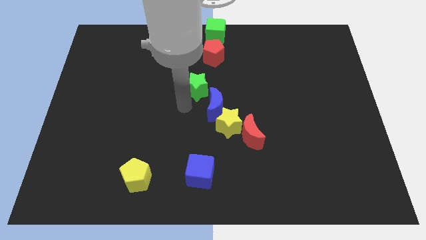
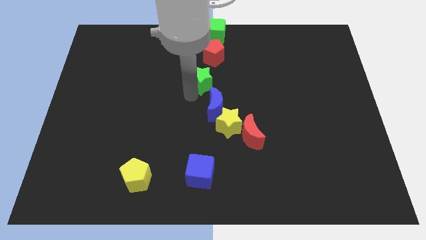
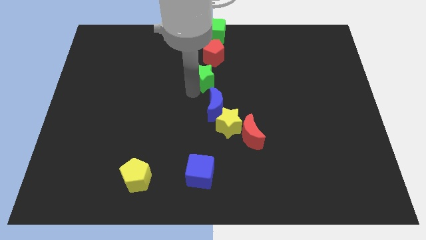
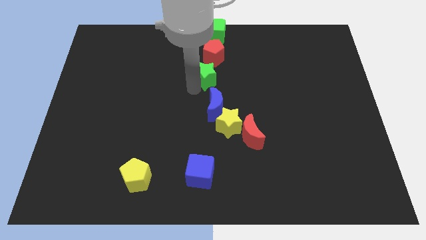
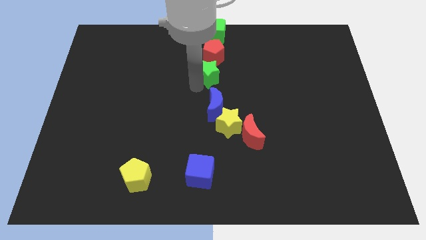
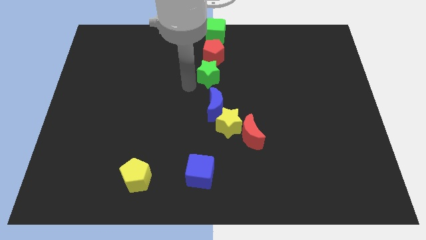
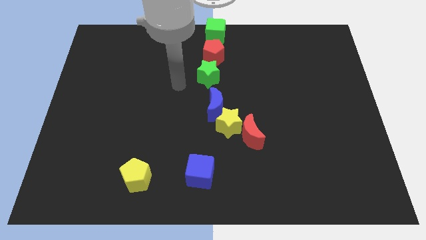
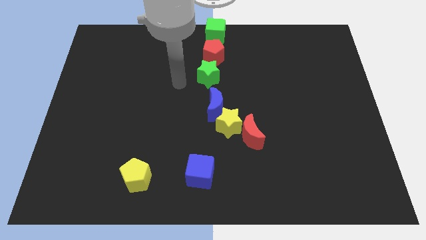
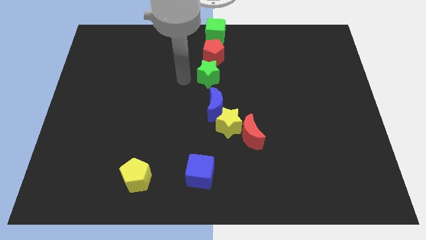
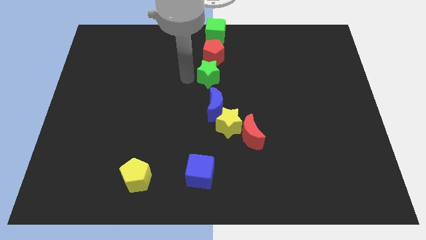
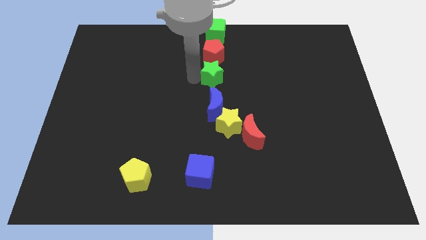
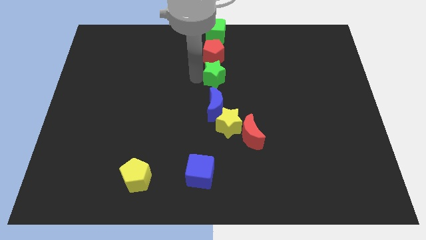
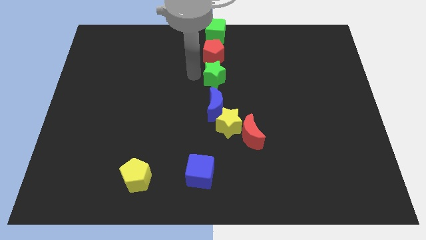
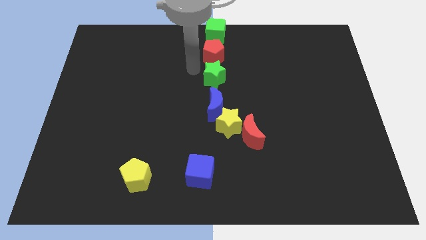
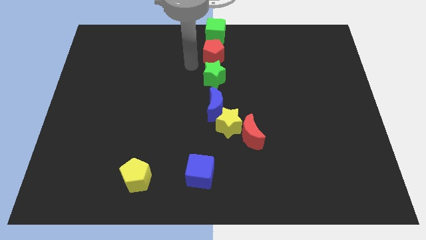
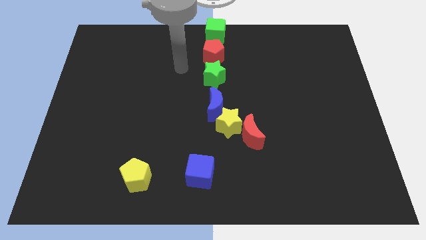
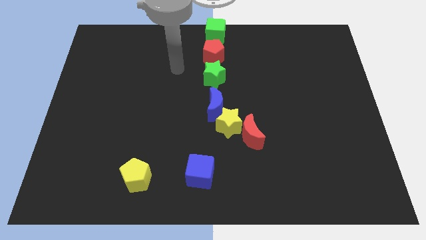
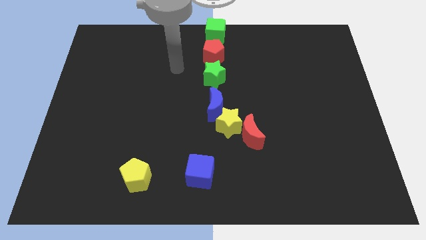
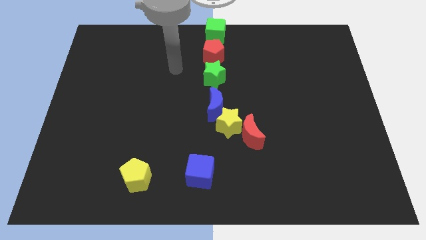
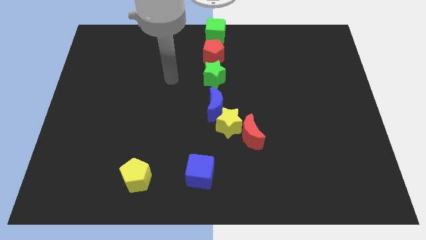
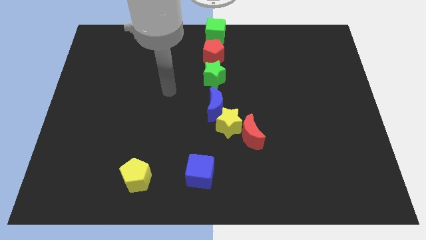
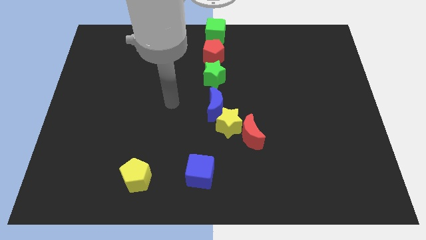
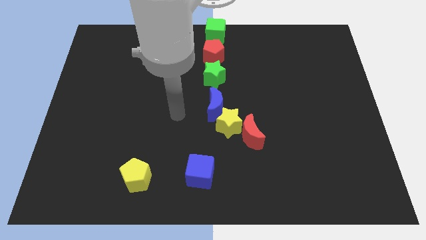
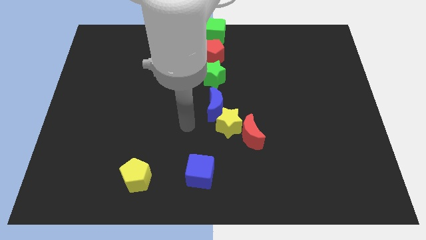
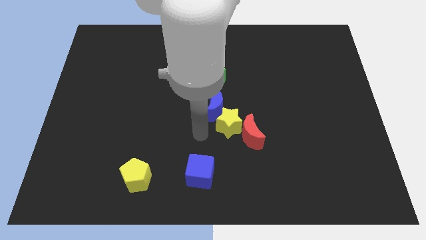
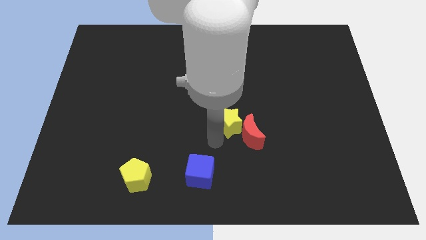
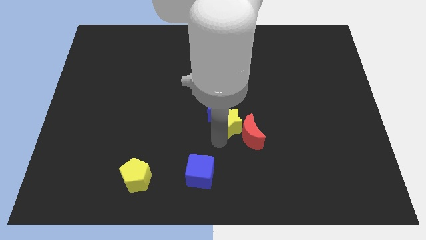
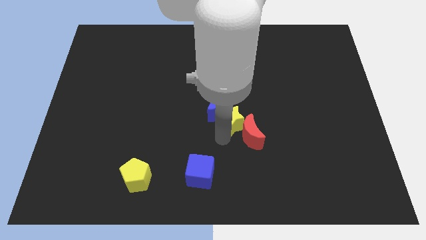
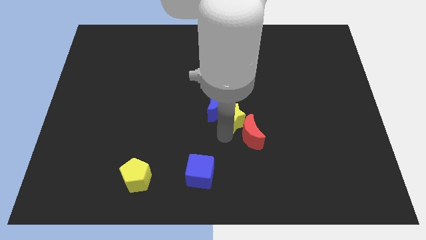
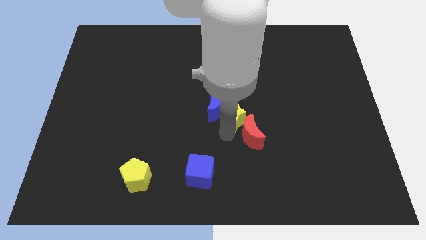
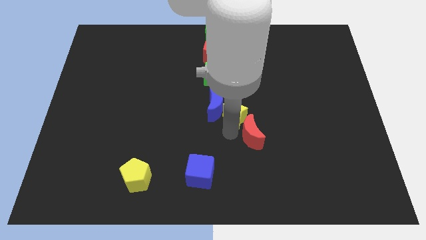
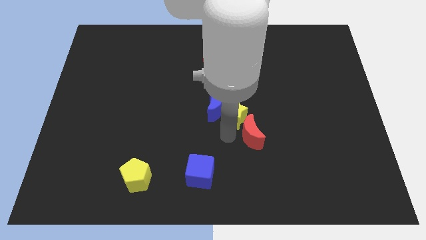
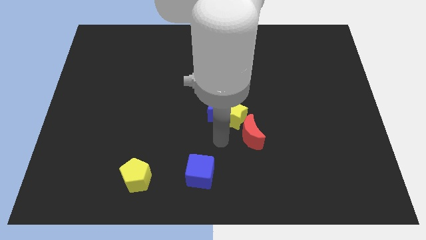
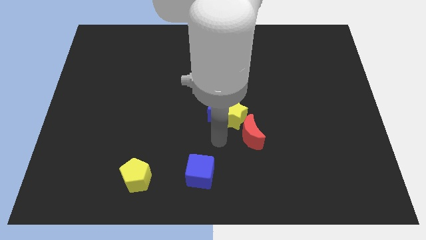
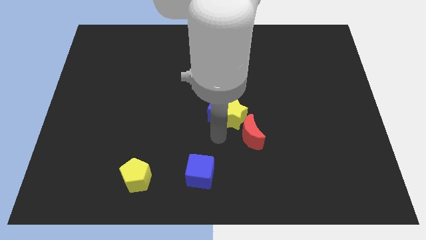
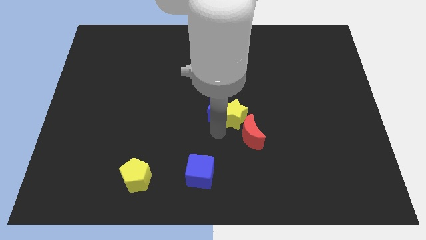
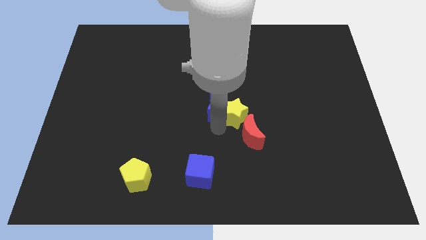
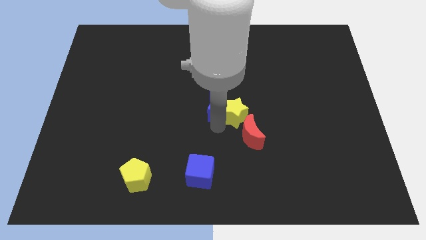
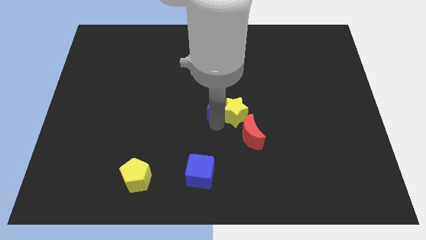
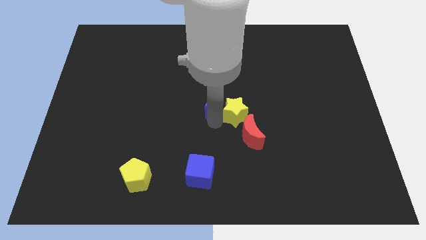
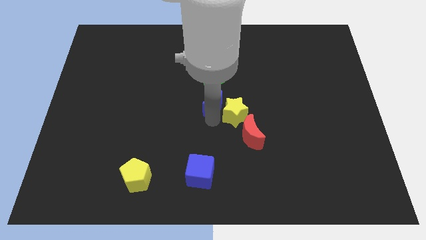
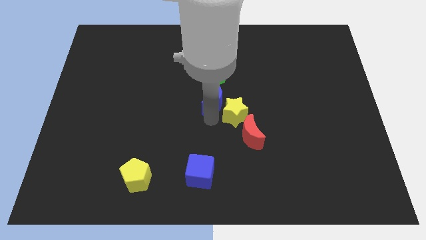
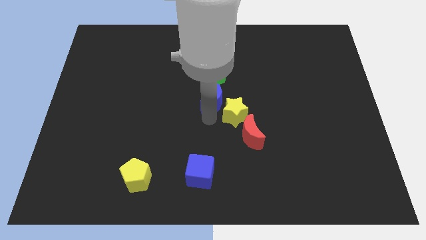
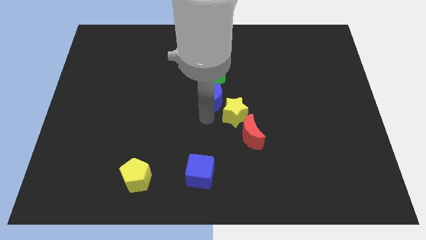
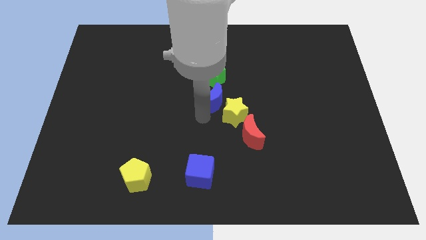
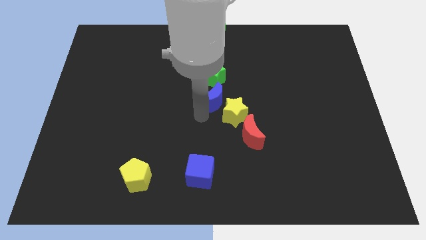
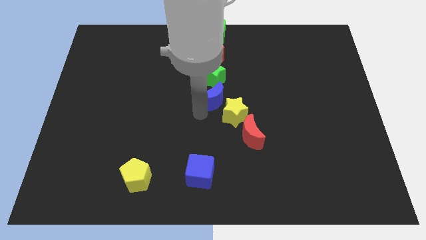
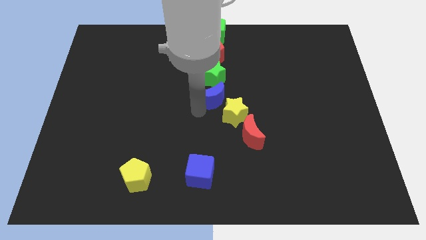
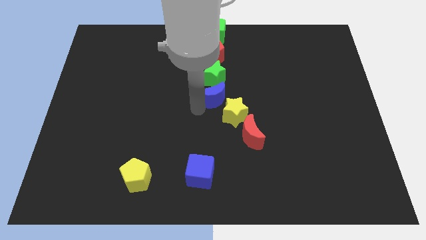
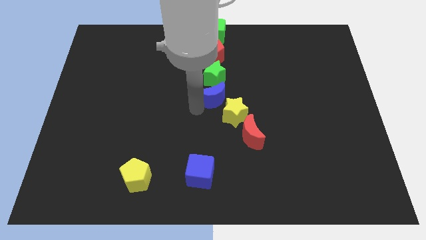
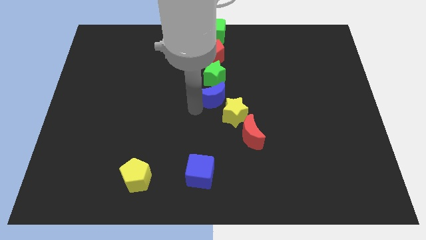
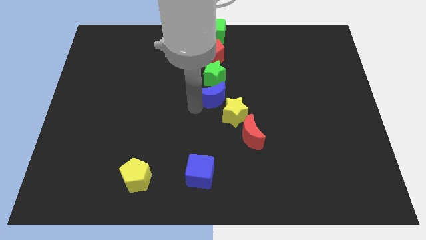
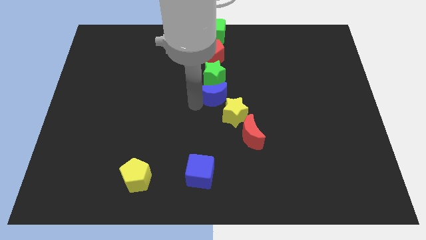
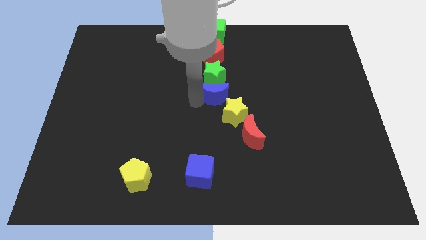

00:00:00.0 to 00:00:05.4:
put the green star and blue moon in a vertical line at the center

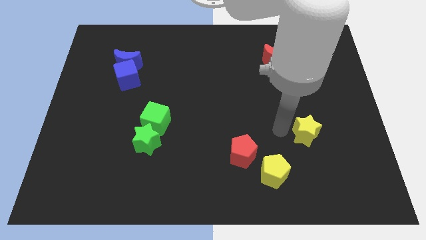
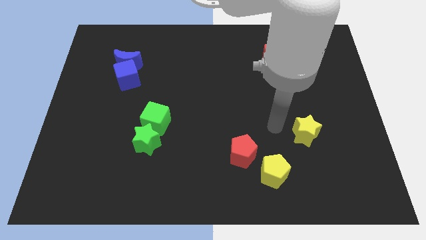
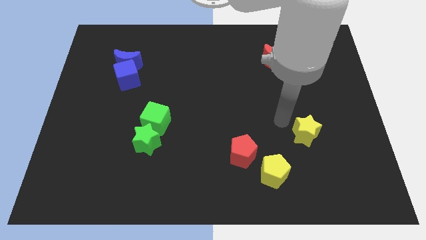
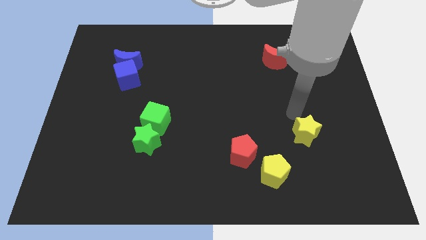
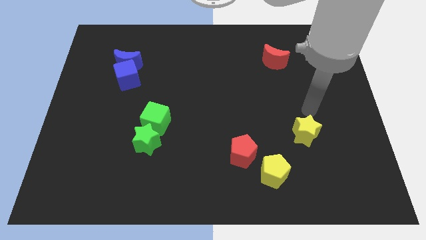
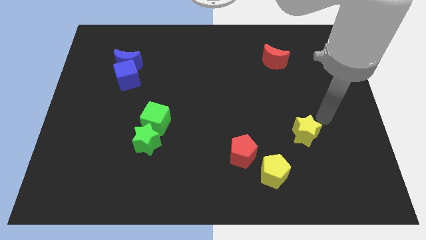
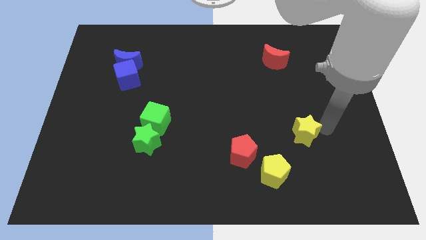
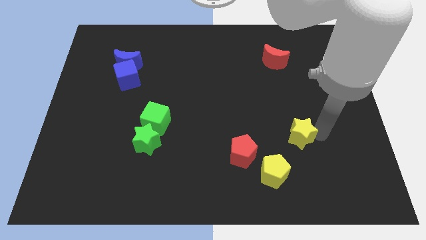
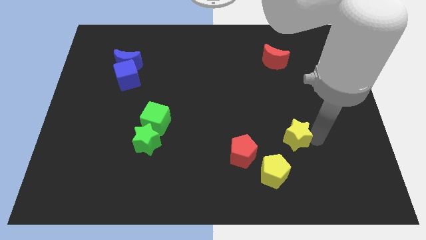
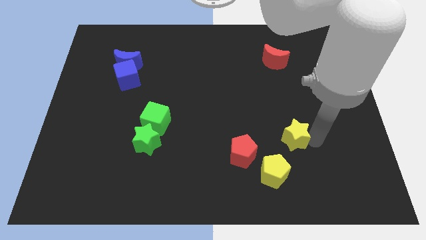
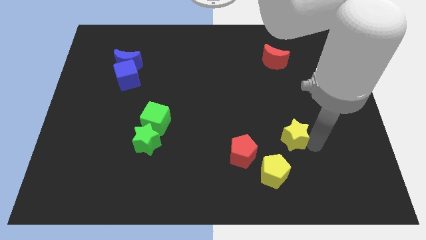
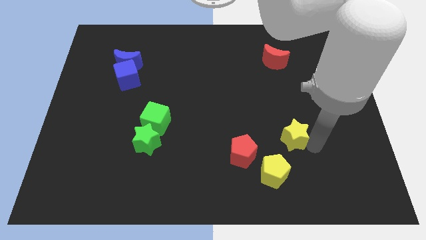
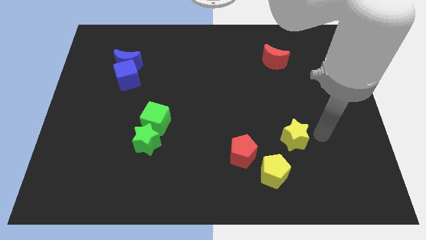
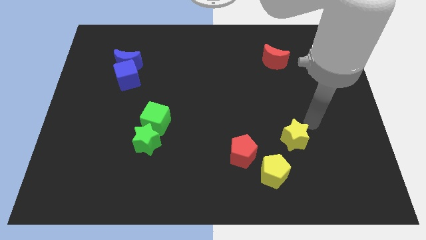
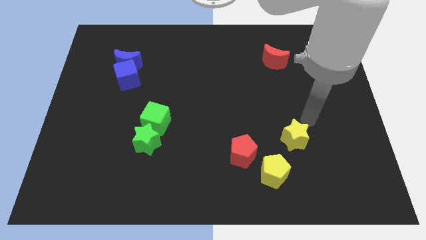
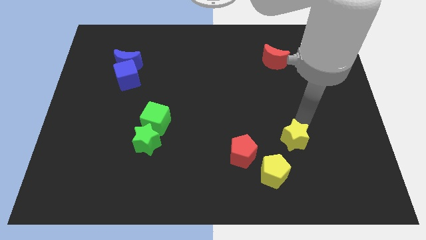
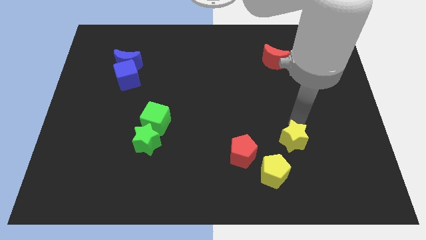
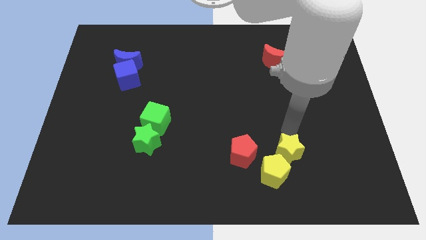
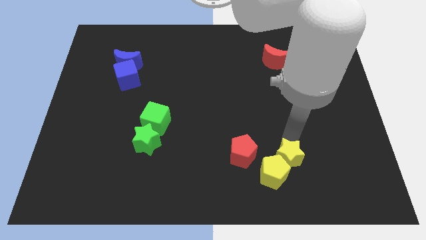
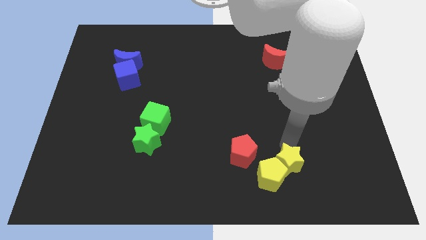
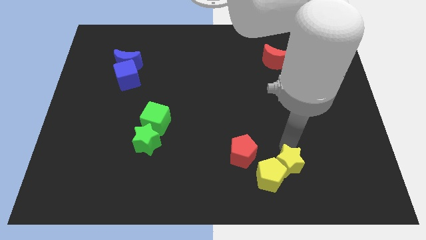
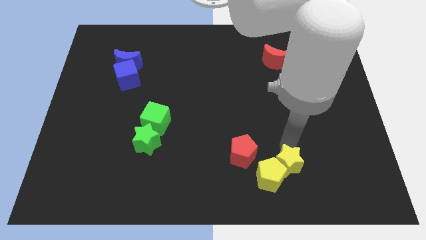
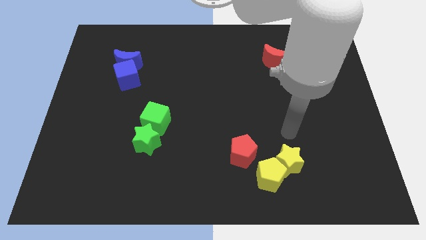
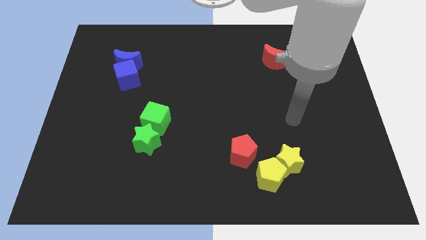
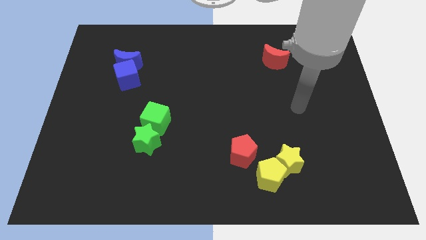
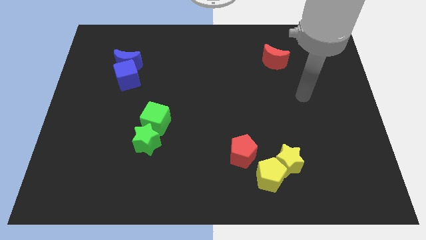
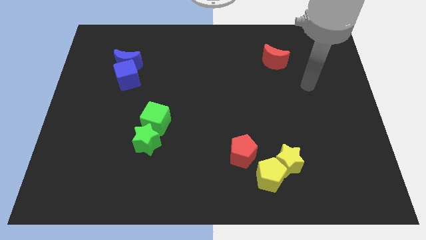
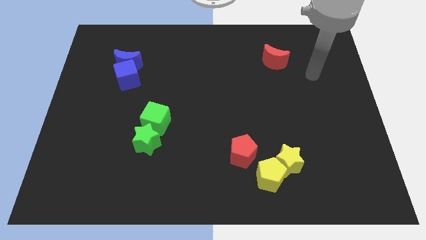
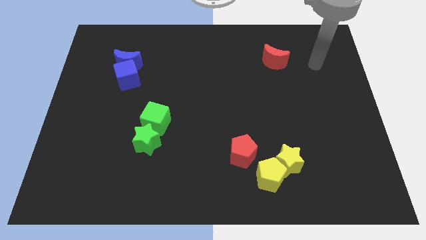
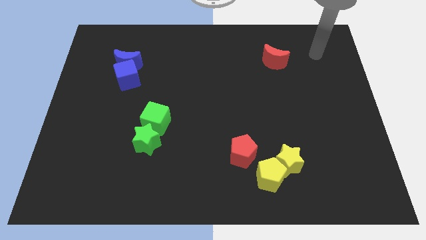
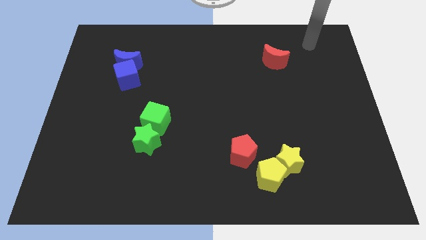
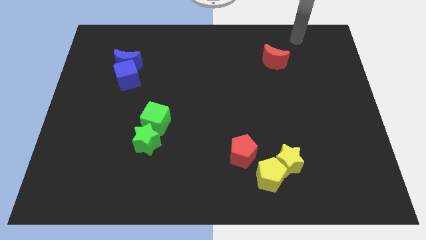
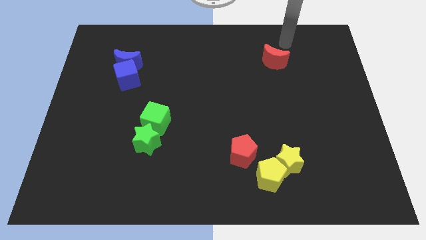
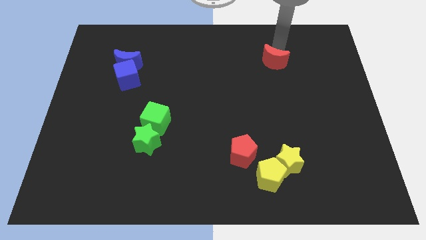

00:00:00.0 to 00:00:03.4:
place the pointer on the top of red moon

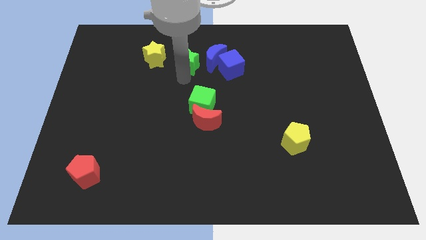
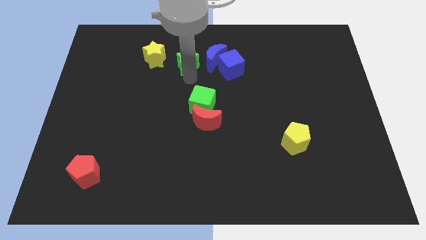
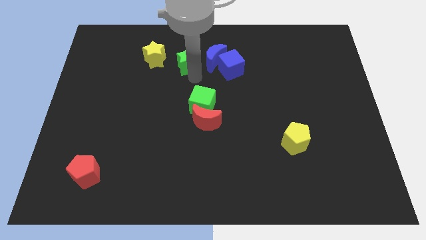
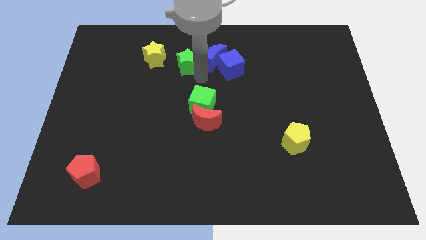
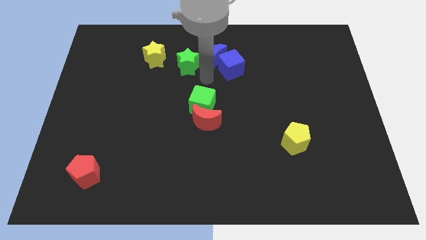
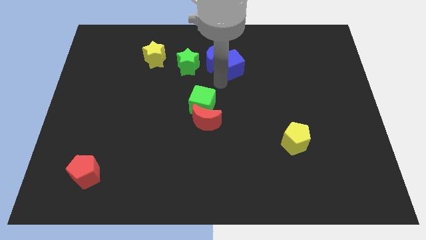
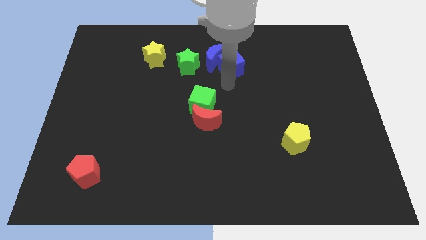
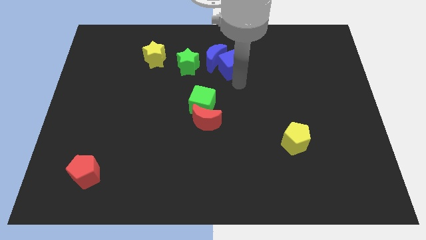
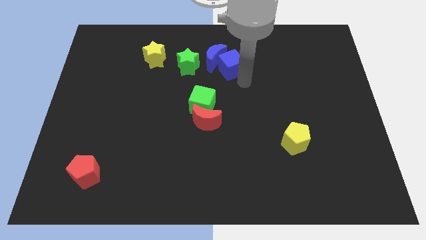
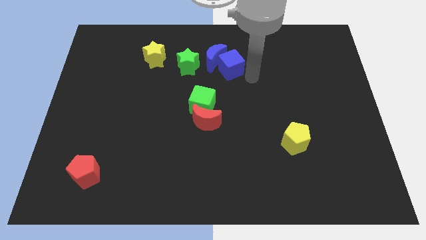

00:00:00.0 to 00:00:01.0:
point your hand at the bottom of the blue cube
